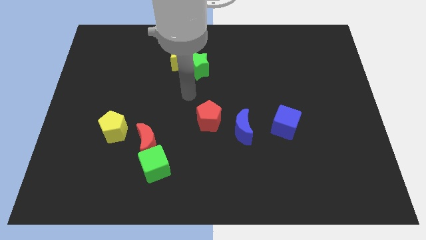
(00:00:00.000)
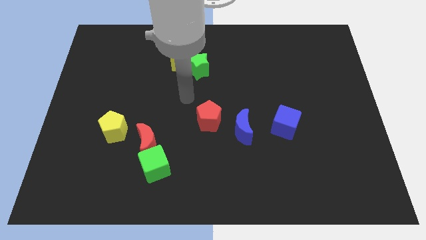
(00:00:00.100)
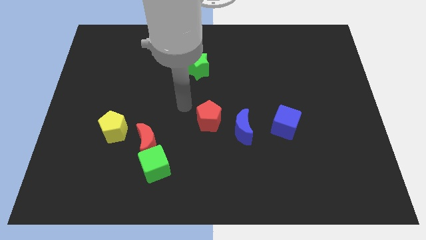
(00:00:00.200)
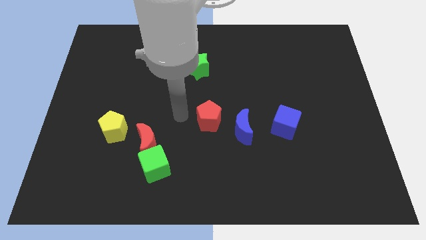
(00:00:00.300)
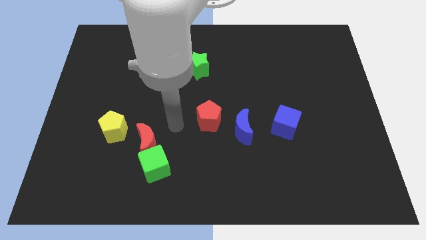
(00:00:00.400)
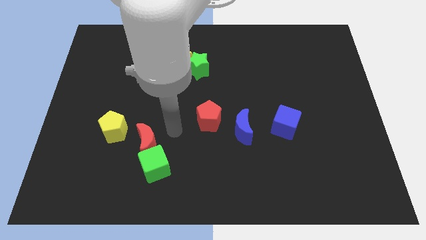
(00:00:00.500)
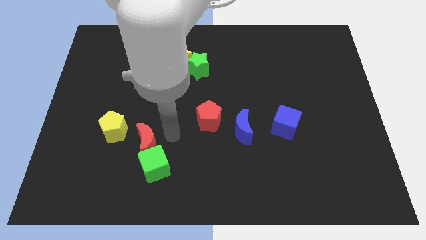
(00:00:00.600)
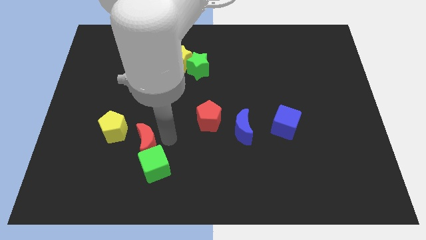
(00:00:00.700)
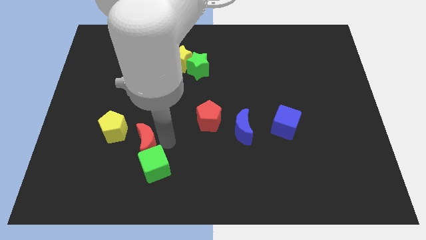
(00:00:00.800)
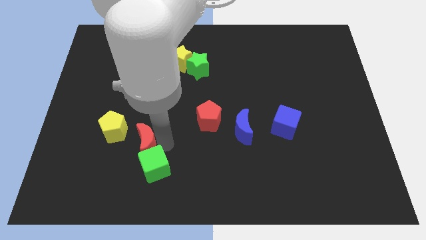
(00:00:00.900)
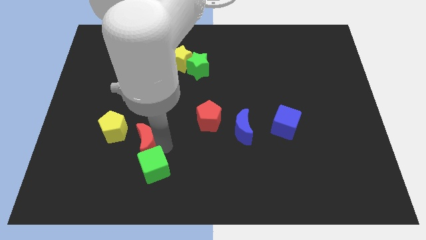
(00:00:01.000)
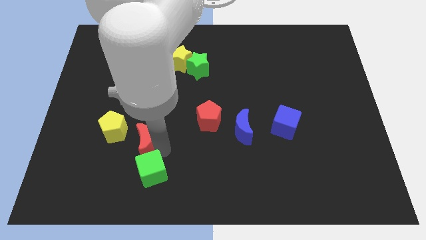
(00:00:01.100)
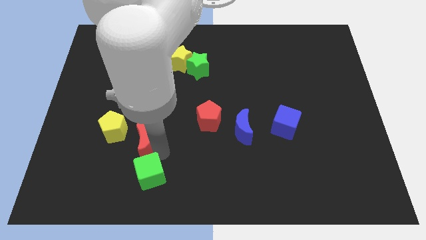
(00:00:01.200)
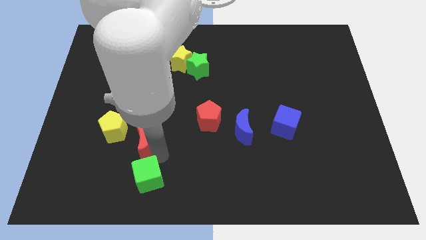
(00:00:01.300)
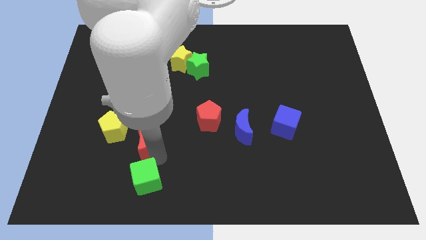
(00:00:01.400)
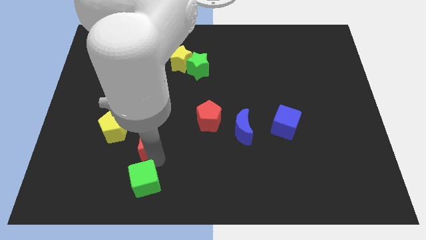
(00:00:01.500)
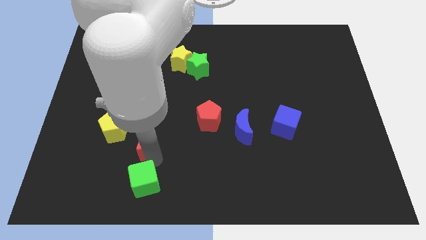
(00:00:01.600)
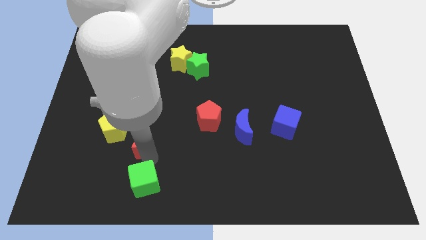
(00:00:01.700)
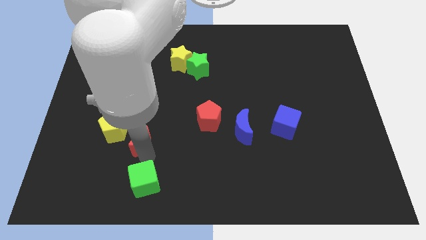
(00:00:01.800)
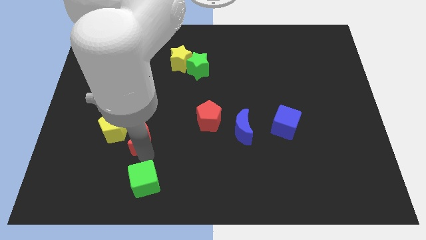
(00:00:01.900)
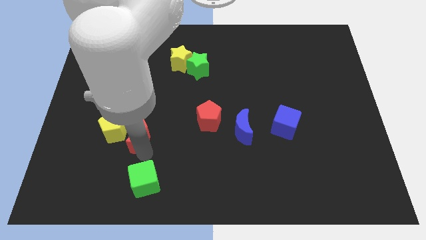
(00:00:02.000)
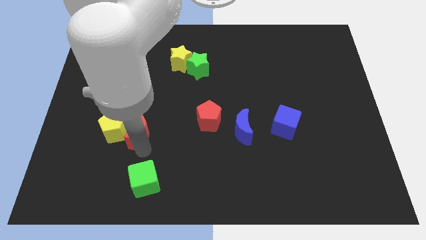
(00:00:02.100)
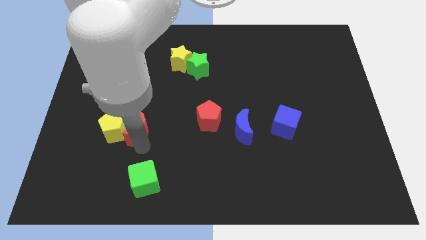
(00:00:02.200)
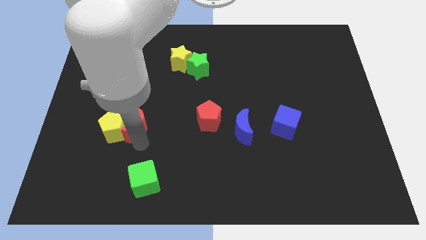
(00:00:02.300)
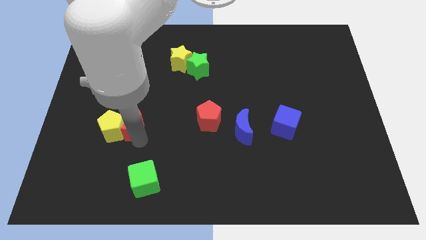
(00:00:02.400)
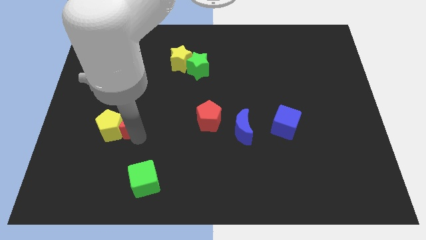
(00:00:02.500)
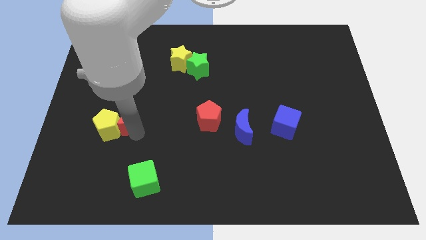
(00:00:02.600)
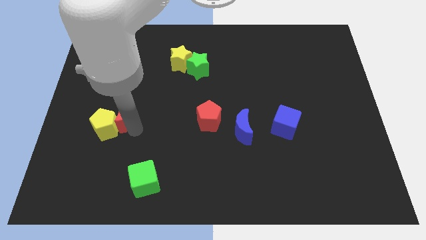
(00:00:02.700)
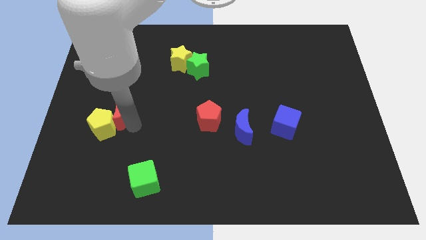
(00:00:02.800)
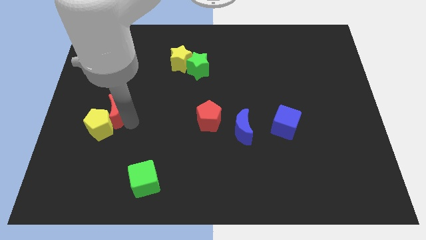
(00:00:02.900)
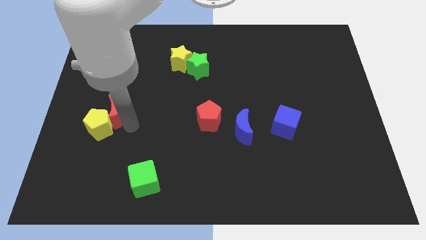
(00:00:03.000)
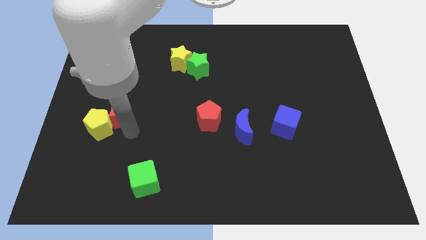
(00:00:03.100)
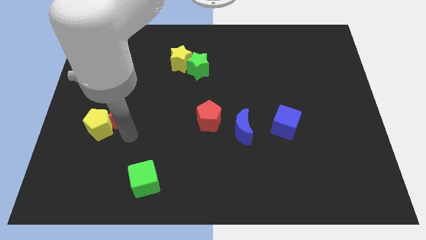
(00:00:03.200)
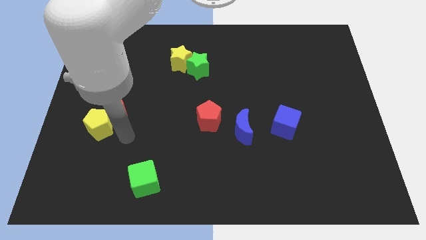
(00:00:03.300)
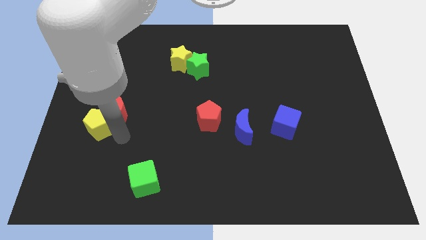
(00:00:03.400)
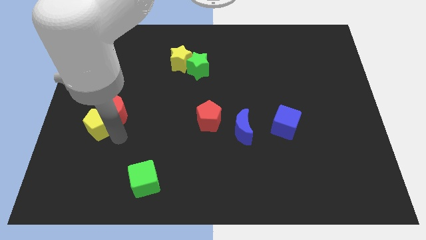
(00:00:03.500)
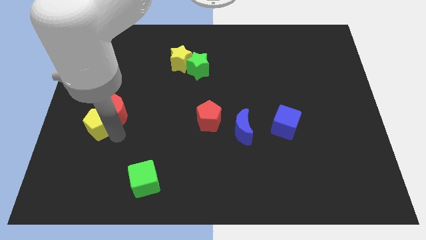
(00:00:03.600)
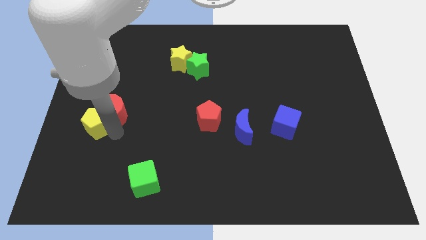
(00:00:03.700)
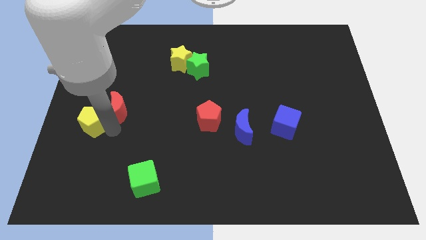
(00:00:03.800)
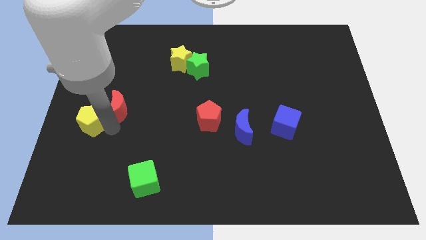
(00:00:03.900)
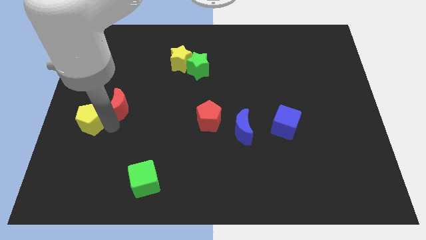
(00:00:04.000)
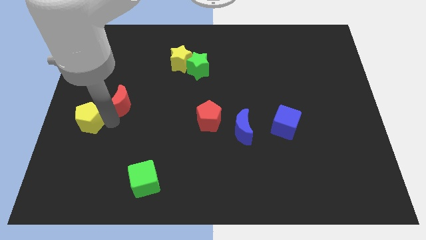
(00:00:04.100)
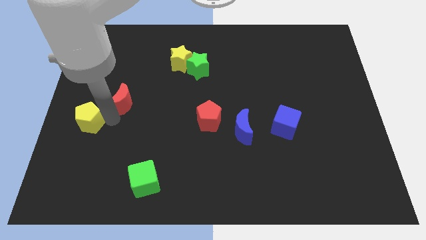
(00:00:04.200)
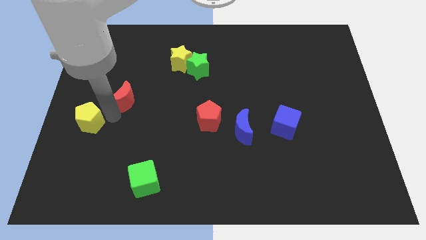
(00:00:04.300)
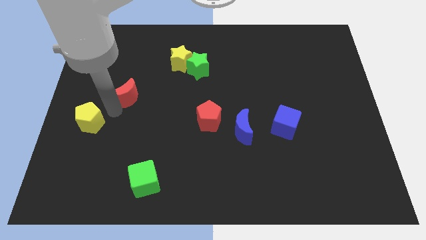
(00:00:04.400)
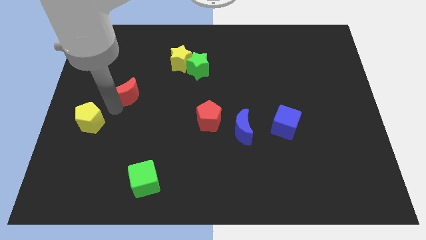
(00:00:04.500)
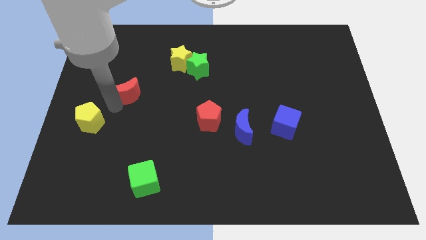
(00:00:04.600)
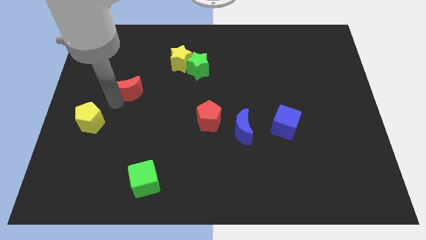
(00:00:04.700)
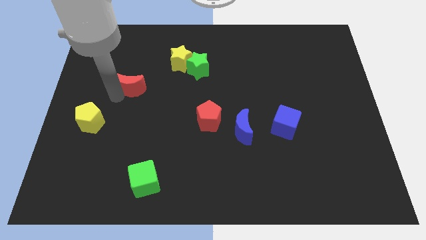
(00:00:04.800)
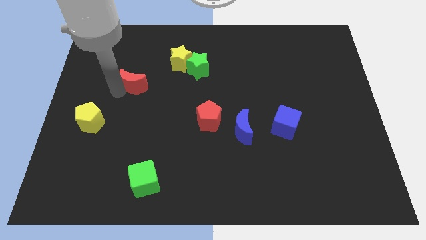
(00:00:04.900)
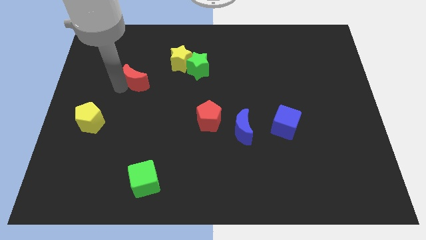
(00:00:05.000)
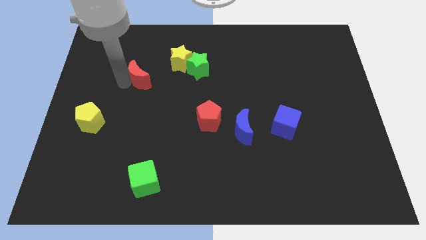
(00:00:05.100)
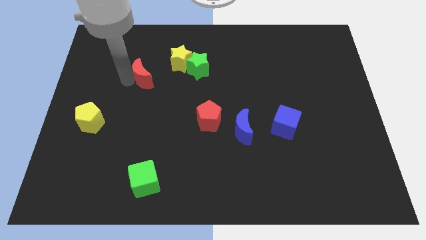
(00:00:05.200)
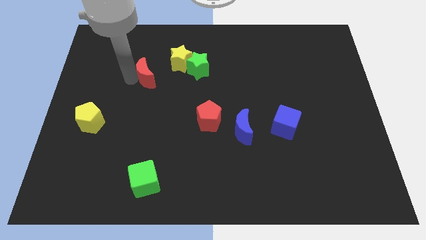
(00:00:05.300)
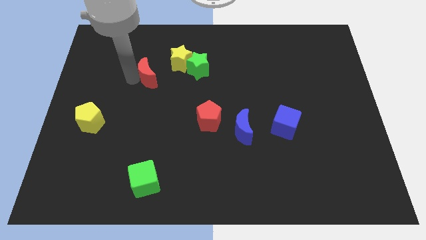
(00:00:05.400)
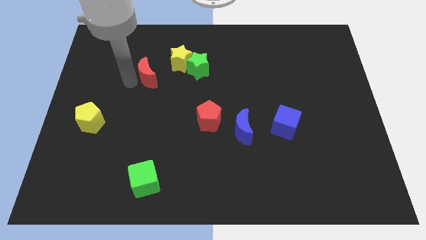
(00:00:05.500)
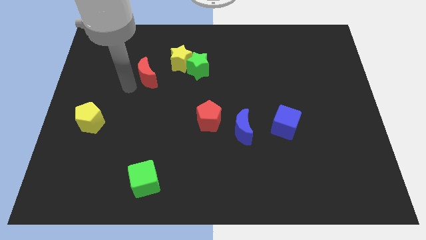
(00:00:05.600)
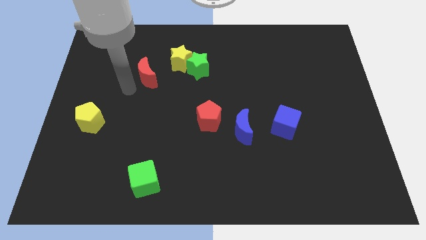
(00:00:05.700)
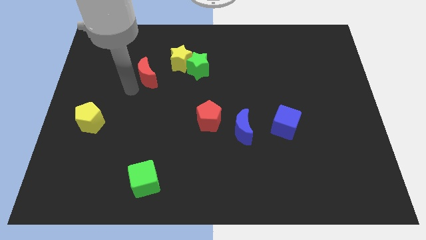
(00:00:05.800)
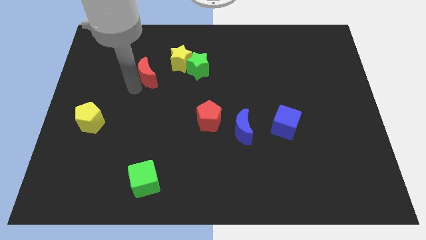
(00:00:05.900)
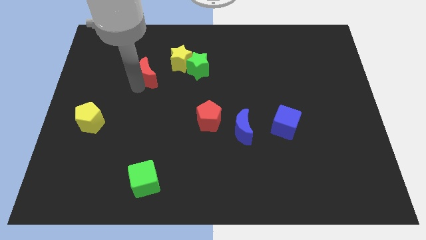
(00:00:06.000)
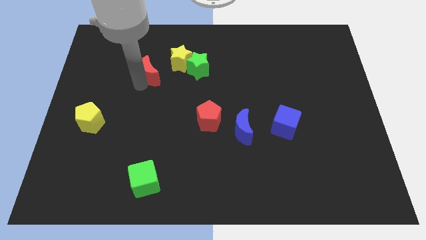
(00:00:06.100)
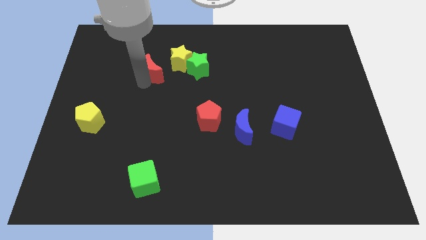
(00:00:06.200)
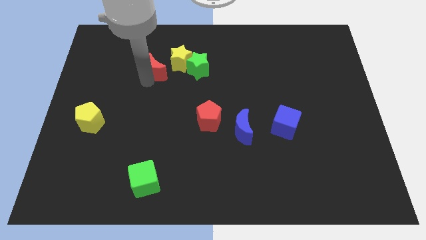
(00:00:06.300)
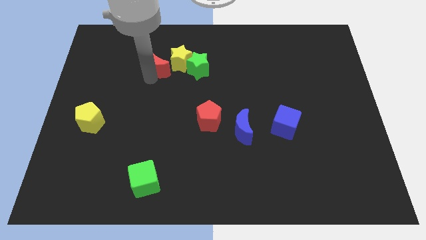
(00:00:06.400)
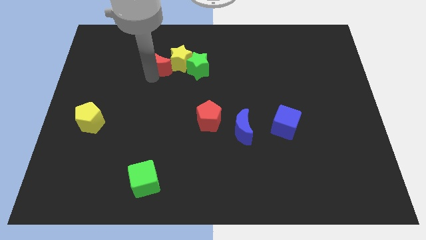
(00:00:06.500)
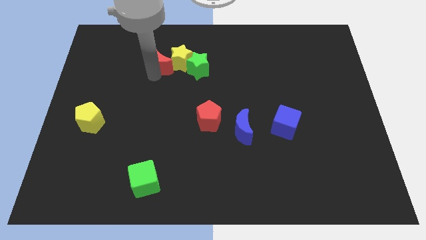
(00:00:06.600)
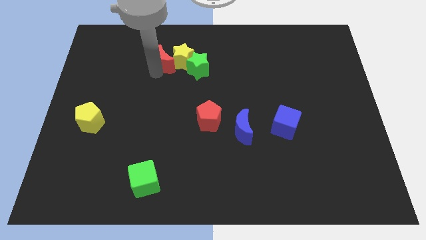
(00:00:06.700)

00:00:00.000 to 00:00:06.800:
slide the red moon close to the yellow star

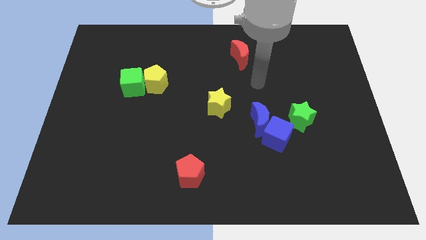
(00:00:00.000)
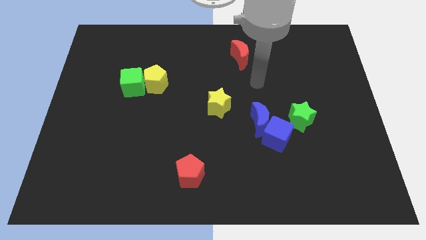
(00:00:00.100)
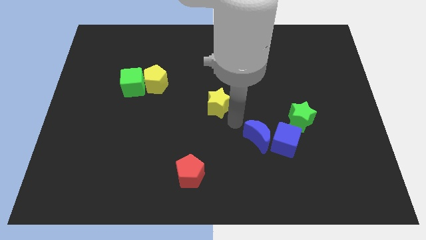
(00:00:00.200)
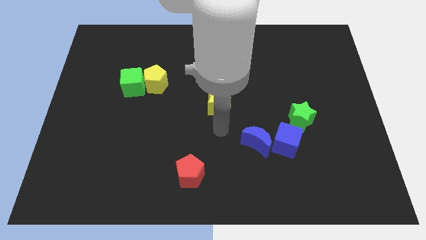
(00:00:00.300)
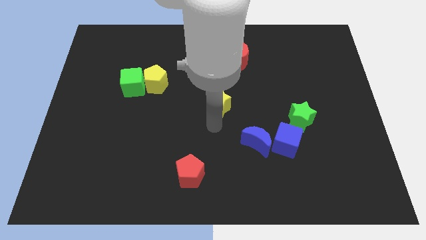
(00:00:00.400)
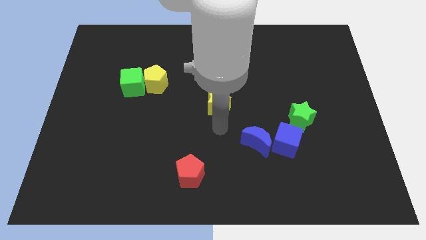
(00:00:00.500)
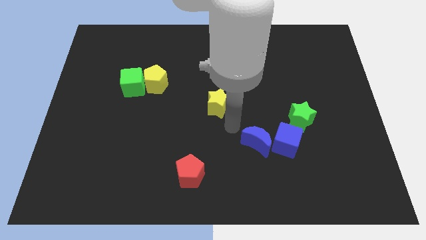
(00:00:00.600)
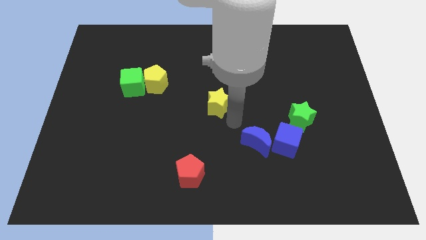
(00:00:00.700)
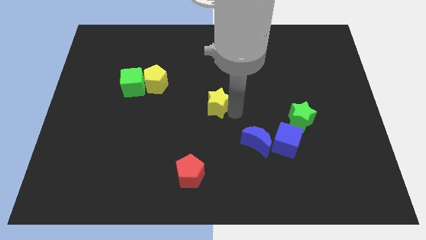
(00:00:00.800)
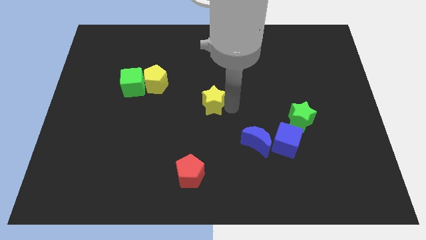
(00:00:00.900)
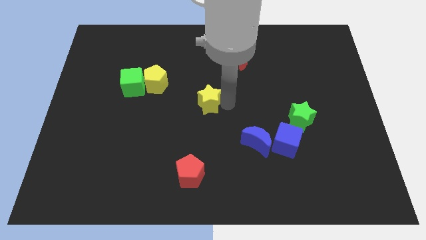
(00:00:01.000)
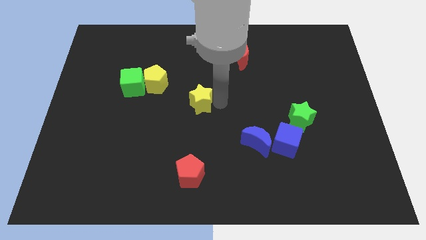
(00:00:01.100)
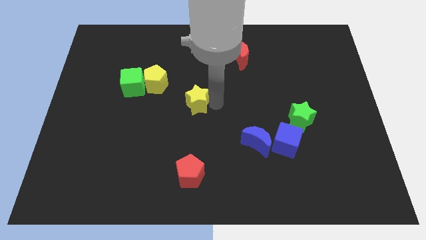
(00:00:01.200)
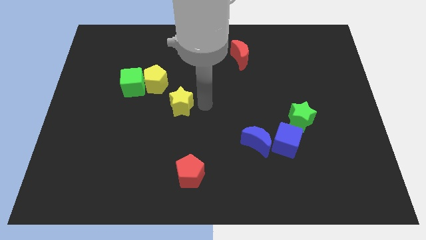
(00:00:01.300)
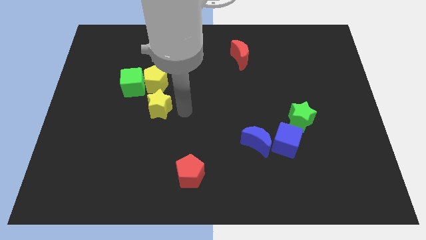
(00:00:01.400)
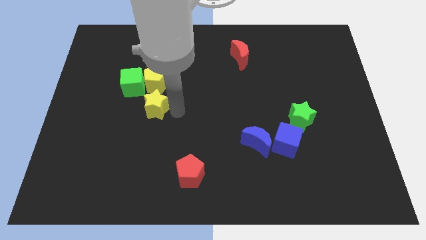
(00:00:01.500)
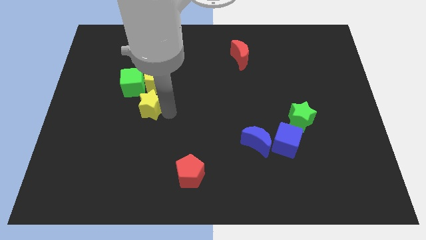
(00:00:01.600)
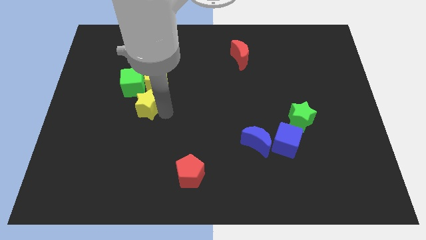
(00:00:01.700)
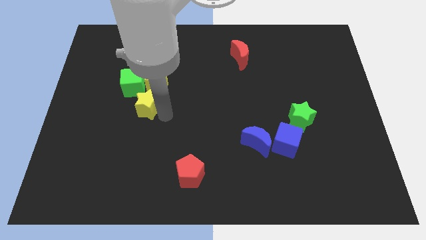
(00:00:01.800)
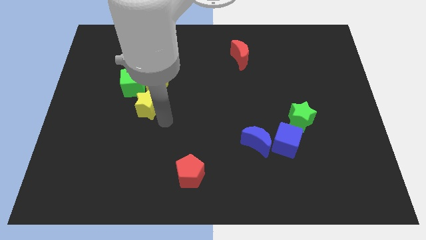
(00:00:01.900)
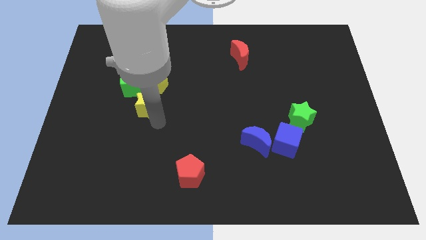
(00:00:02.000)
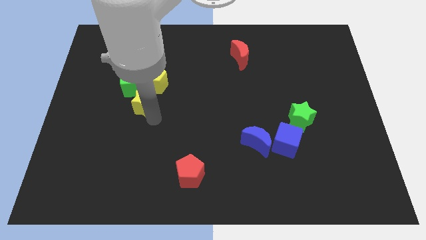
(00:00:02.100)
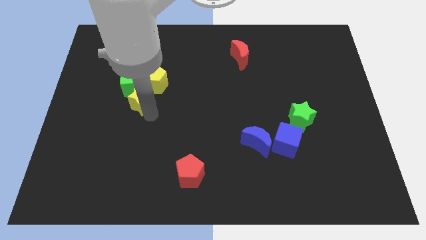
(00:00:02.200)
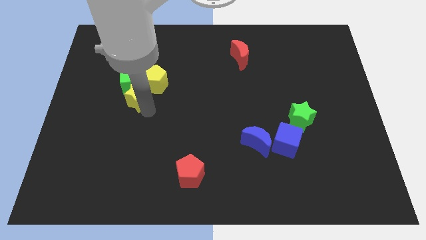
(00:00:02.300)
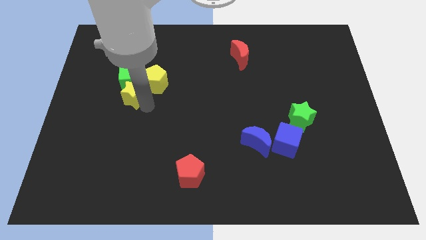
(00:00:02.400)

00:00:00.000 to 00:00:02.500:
slide the yellow star next to the green cube
